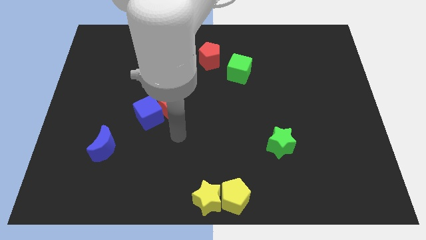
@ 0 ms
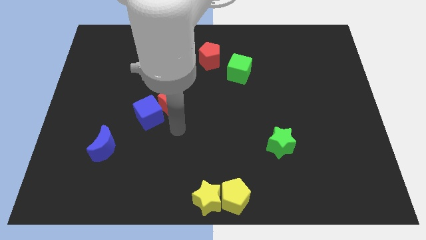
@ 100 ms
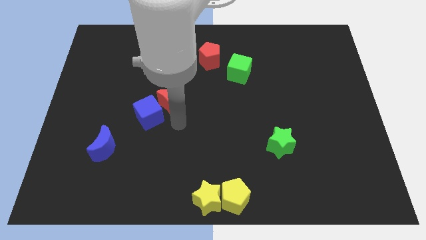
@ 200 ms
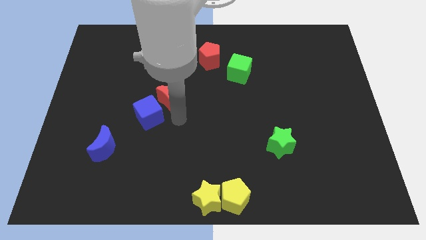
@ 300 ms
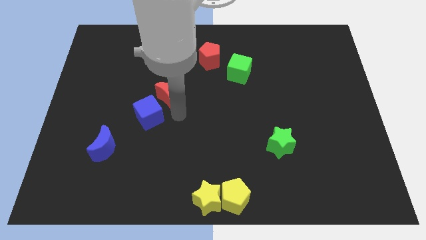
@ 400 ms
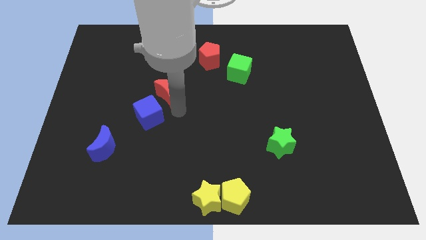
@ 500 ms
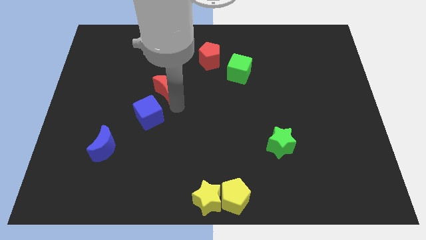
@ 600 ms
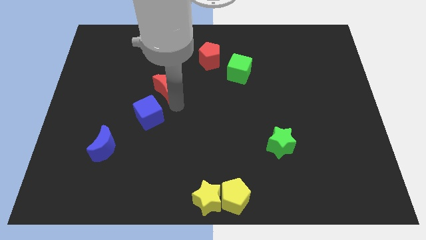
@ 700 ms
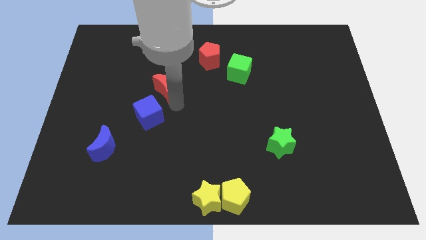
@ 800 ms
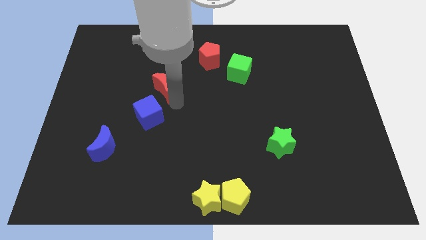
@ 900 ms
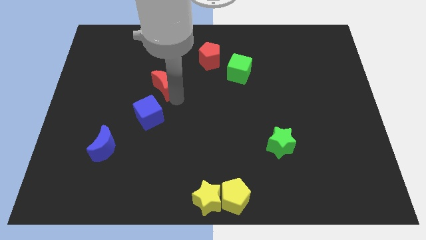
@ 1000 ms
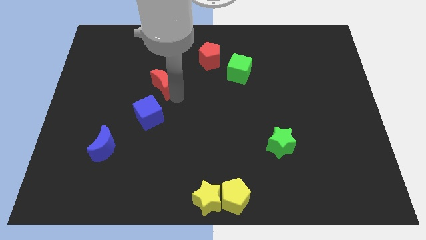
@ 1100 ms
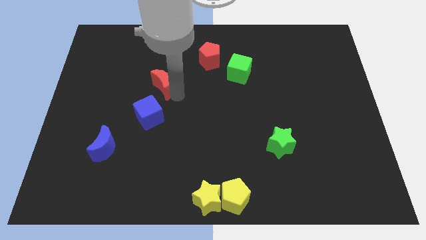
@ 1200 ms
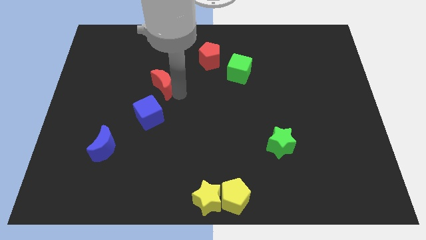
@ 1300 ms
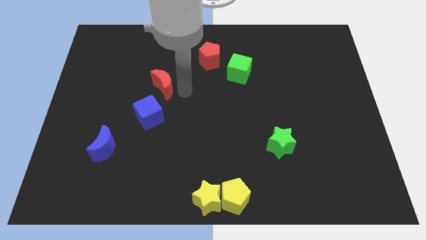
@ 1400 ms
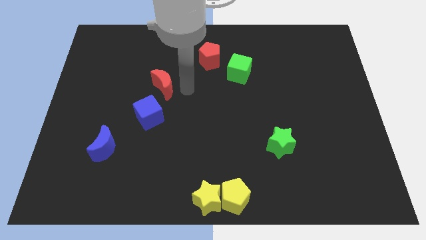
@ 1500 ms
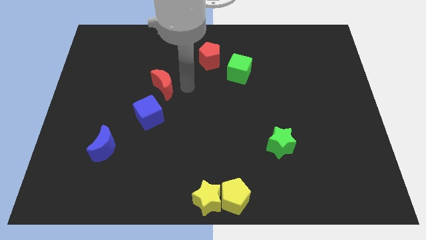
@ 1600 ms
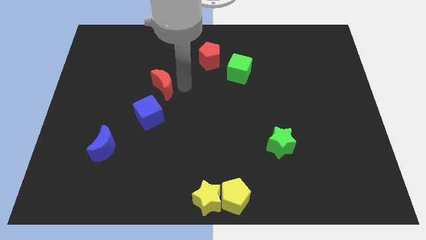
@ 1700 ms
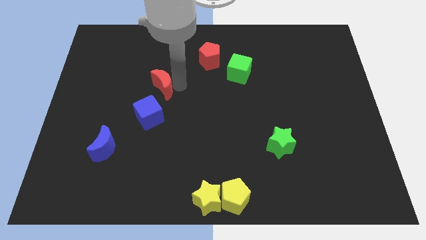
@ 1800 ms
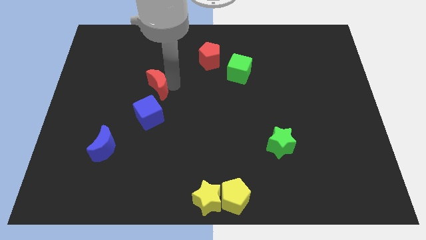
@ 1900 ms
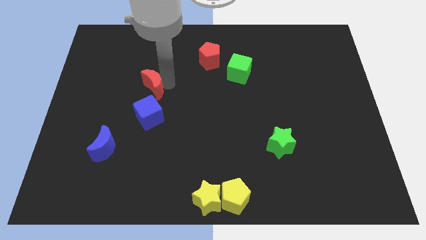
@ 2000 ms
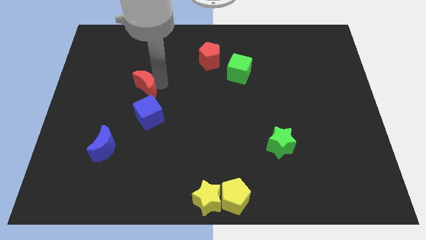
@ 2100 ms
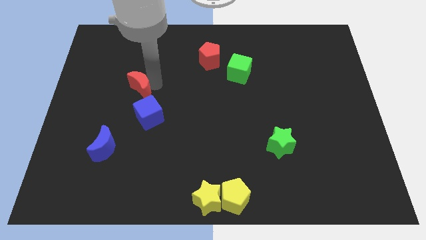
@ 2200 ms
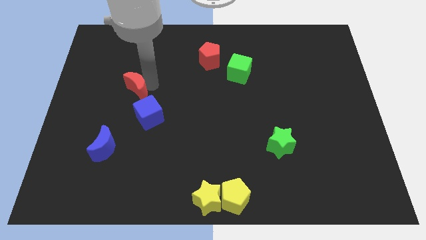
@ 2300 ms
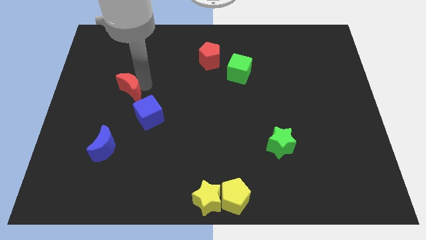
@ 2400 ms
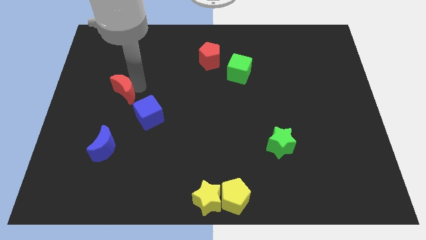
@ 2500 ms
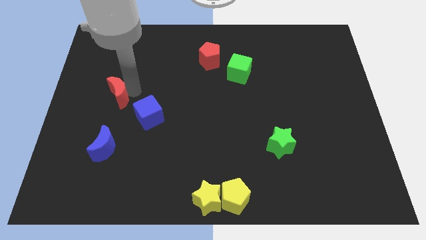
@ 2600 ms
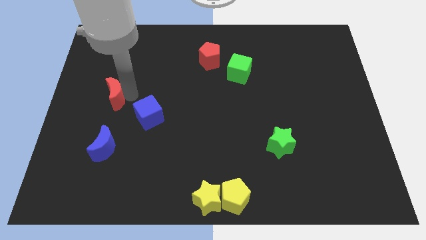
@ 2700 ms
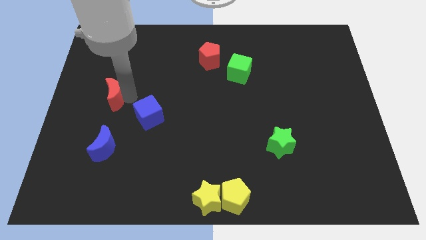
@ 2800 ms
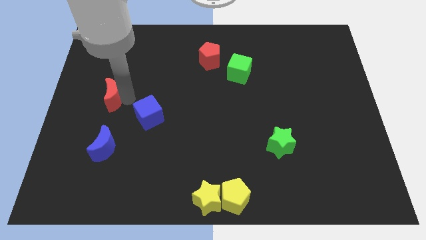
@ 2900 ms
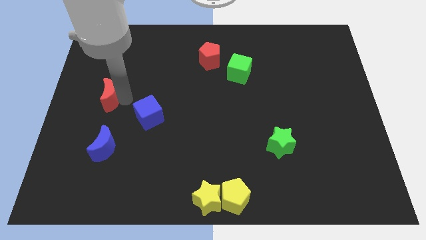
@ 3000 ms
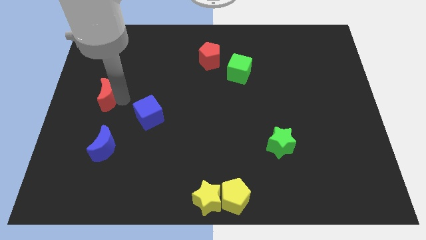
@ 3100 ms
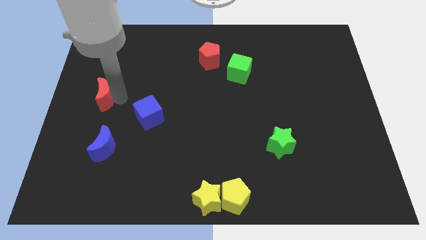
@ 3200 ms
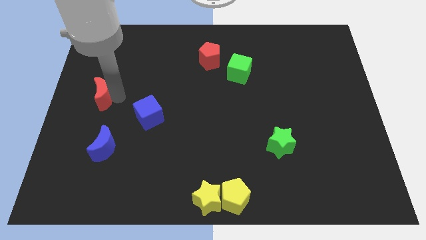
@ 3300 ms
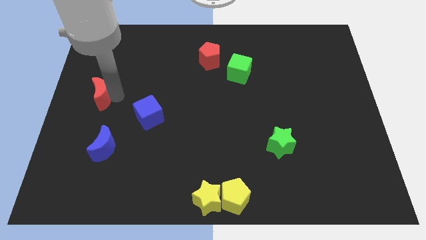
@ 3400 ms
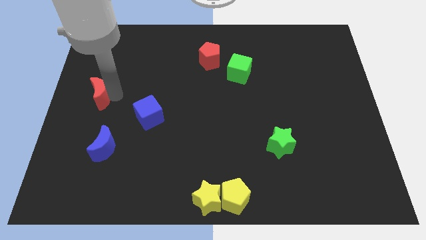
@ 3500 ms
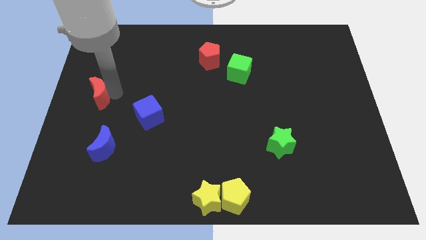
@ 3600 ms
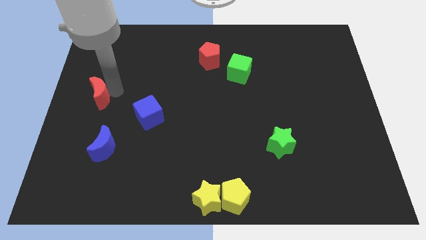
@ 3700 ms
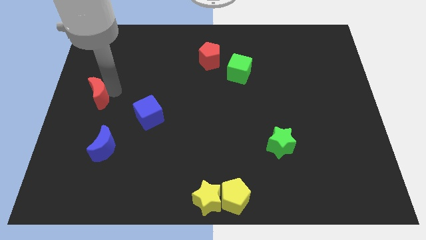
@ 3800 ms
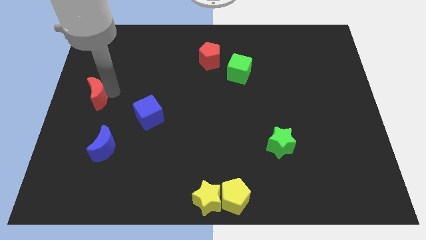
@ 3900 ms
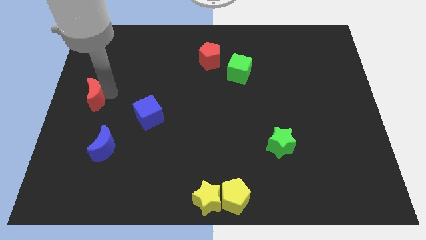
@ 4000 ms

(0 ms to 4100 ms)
separate the red moon from the blue cube

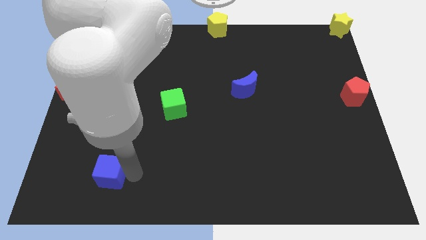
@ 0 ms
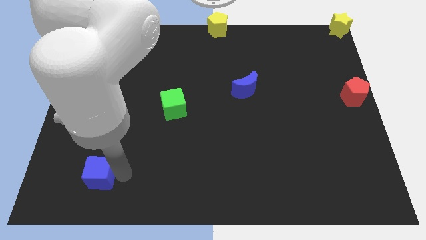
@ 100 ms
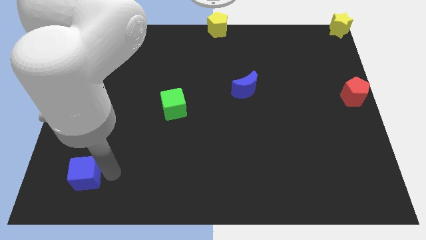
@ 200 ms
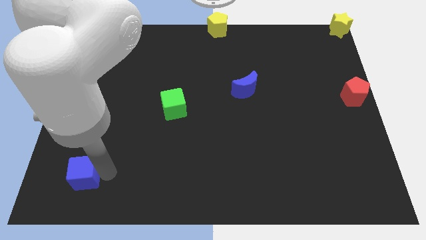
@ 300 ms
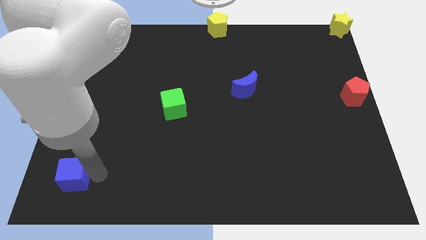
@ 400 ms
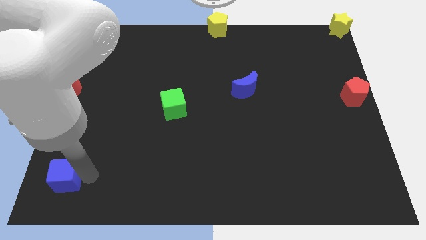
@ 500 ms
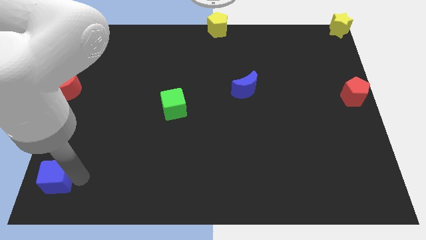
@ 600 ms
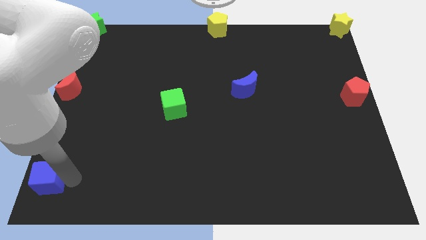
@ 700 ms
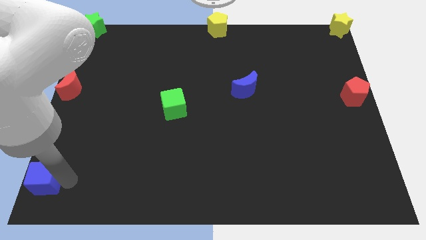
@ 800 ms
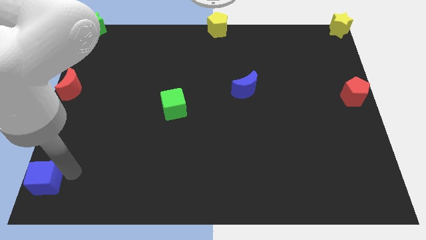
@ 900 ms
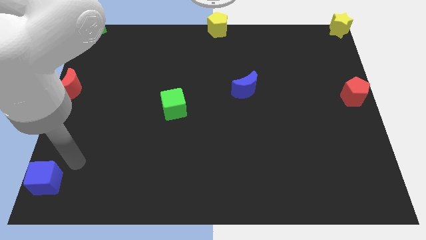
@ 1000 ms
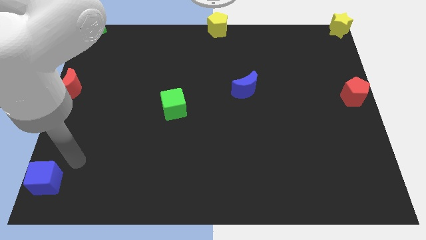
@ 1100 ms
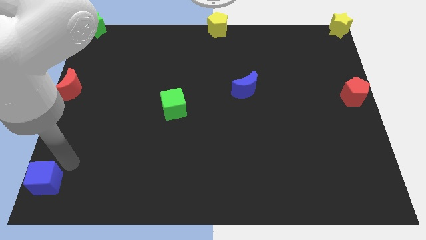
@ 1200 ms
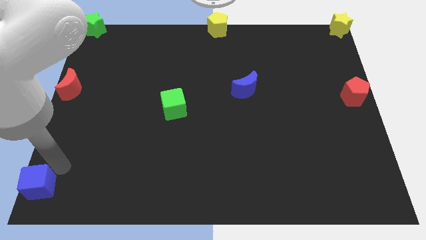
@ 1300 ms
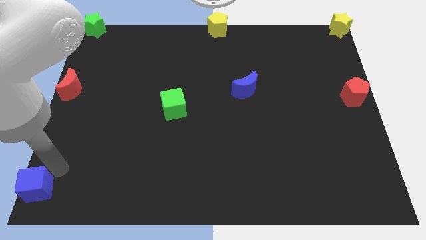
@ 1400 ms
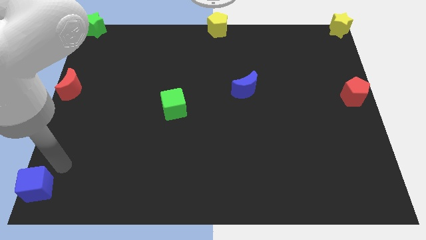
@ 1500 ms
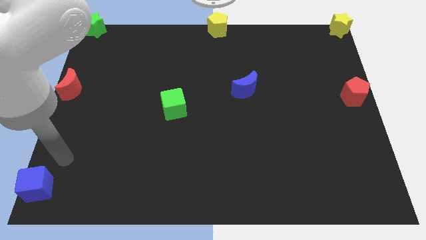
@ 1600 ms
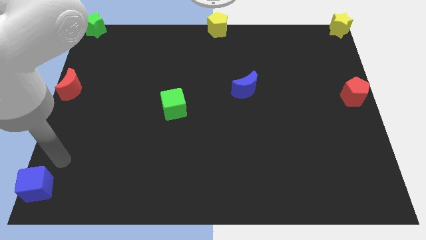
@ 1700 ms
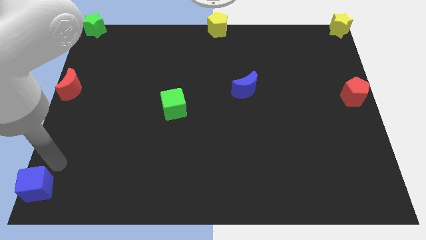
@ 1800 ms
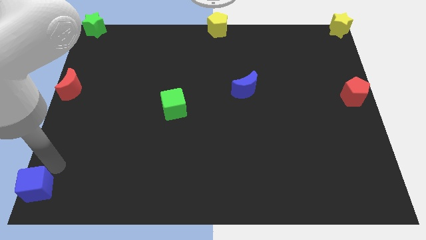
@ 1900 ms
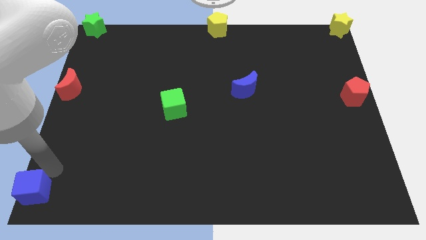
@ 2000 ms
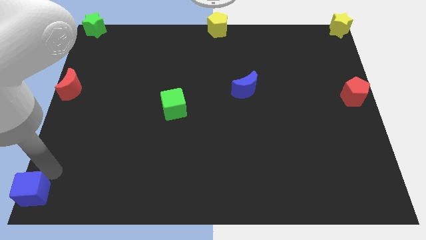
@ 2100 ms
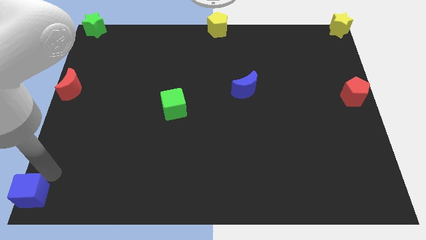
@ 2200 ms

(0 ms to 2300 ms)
push the blue cube towards the bottom left corner tof the board

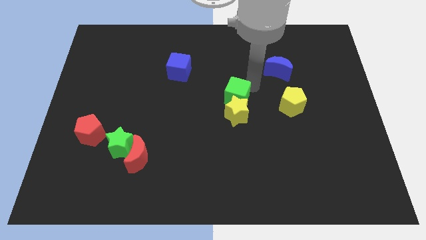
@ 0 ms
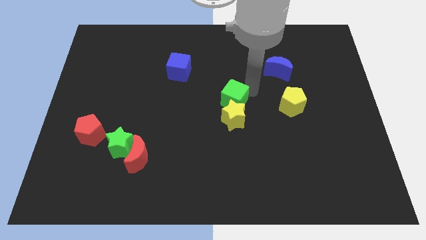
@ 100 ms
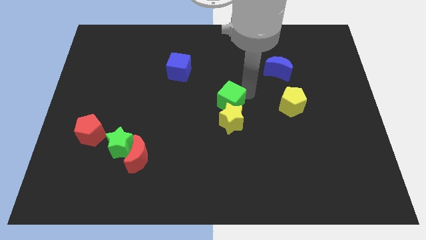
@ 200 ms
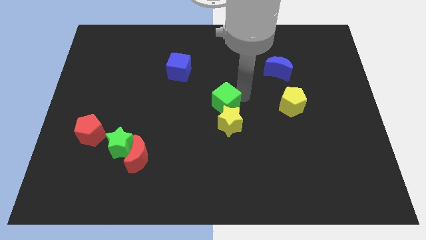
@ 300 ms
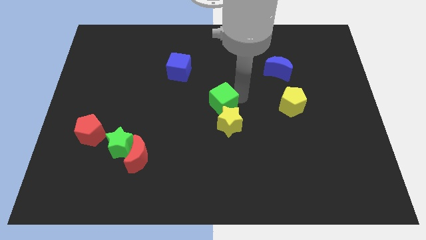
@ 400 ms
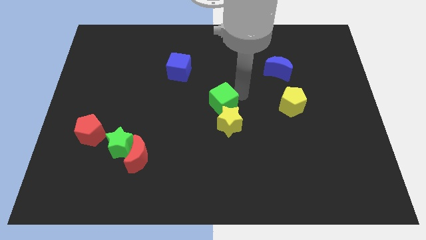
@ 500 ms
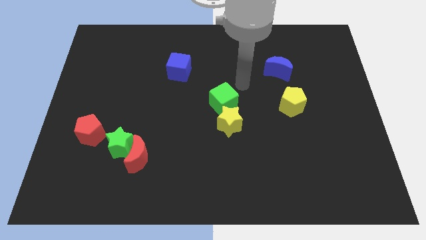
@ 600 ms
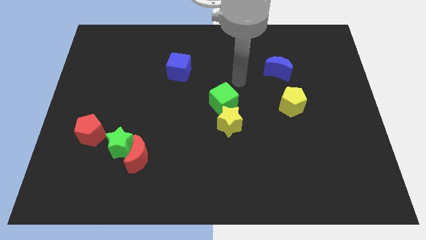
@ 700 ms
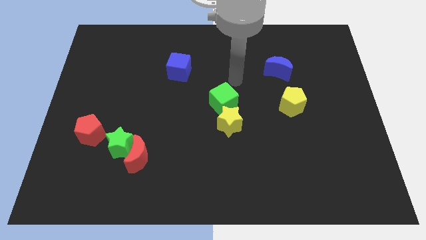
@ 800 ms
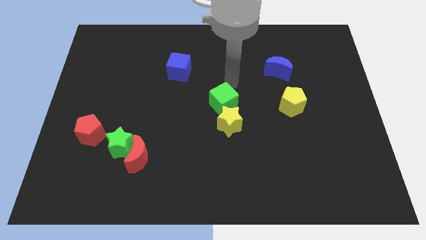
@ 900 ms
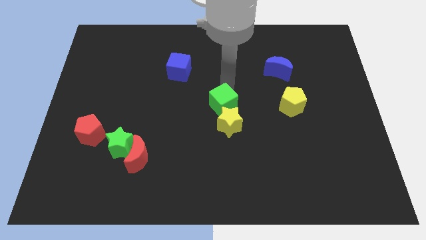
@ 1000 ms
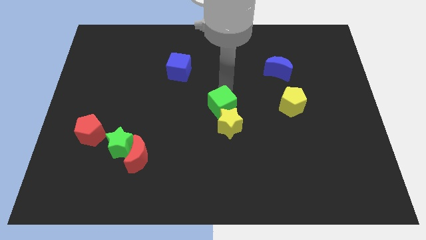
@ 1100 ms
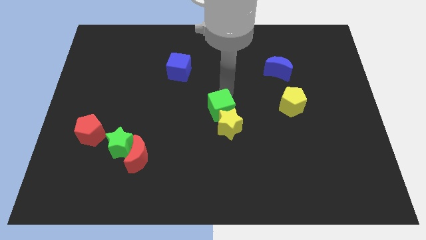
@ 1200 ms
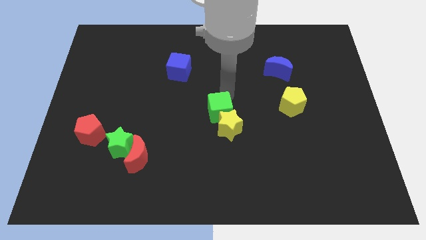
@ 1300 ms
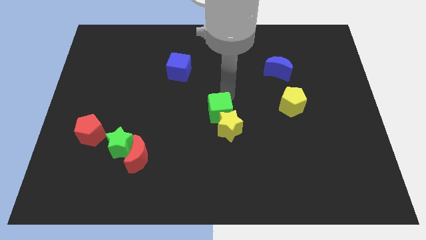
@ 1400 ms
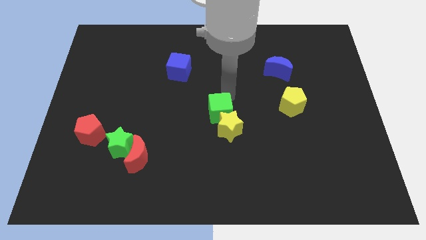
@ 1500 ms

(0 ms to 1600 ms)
push the green cube and yellow star to the bottom side

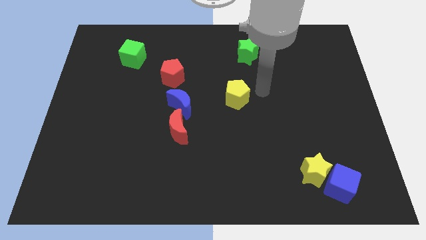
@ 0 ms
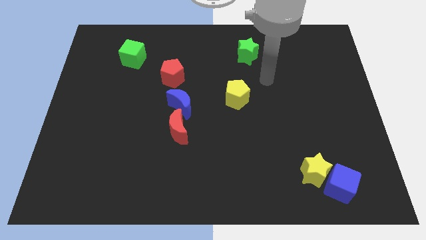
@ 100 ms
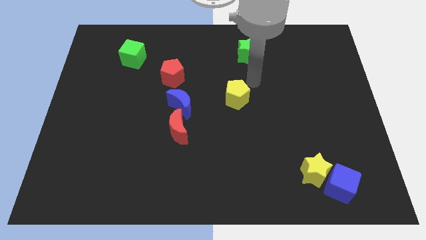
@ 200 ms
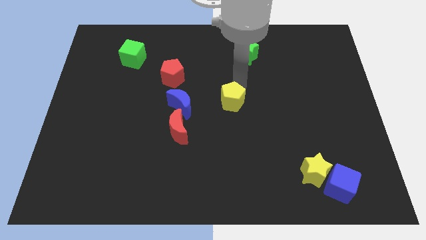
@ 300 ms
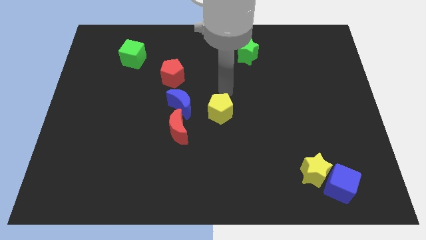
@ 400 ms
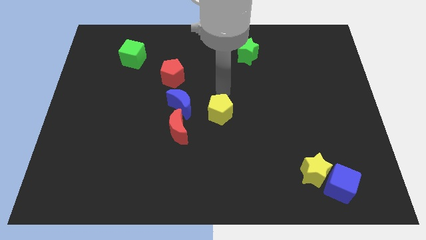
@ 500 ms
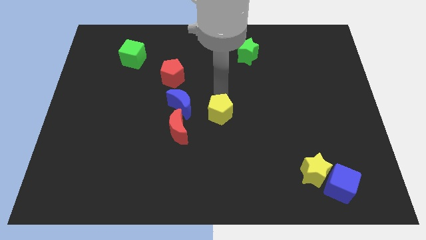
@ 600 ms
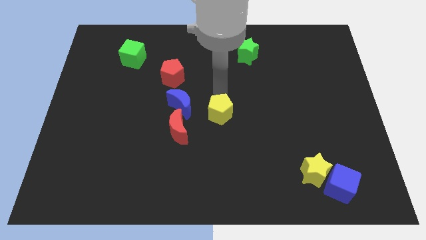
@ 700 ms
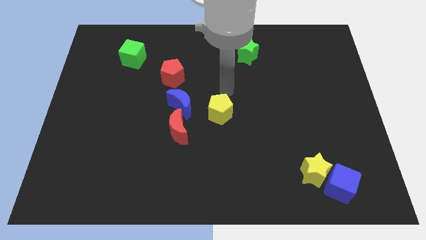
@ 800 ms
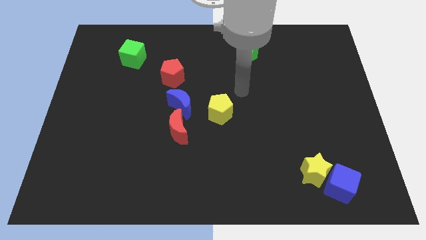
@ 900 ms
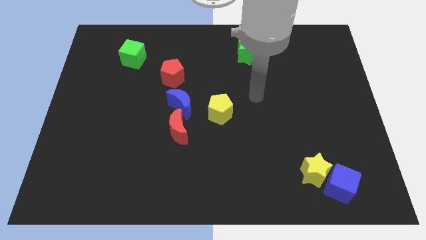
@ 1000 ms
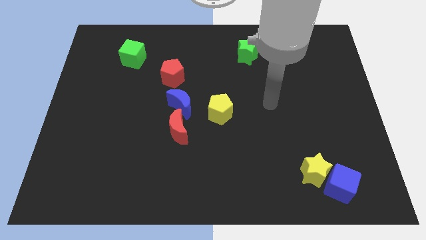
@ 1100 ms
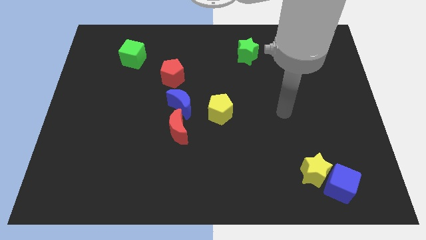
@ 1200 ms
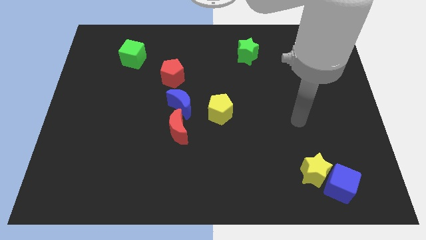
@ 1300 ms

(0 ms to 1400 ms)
push the yellow pentagon towards the red moon
